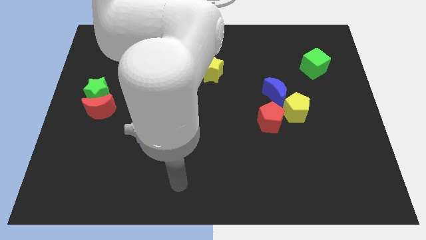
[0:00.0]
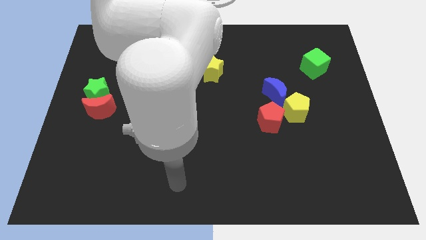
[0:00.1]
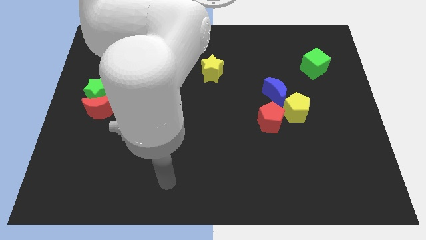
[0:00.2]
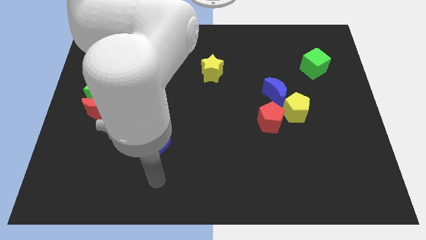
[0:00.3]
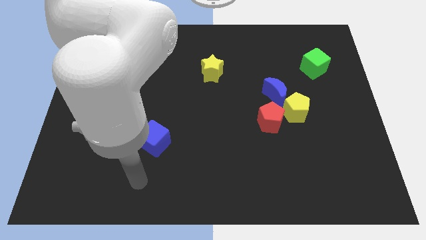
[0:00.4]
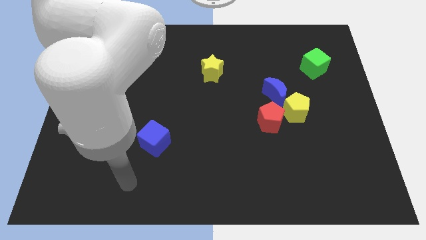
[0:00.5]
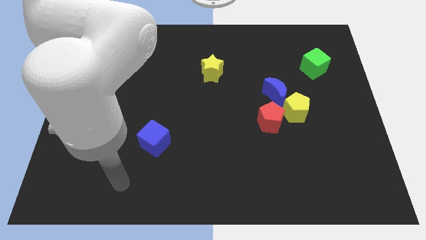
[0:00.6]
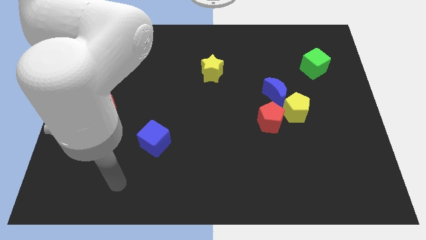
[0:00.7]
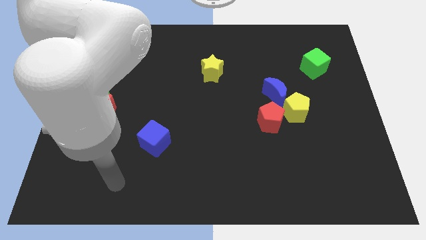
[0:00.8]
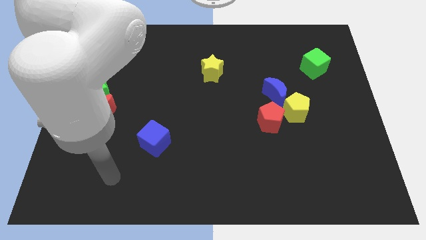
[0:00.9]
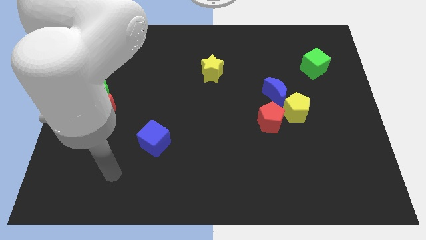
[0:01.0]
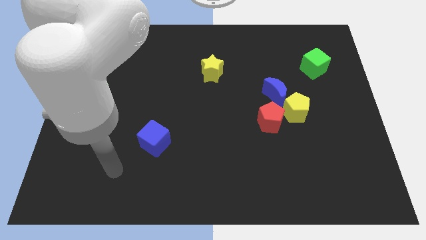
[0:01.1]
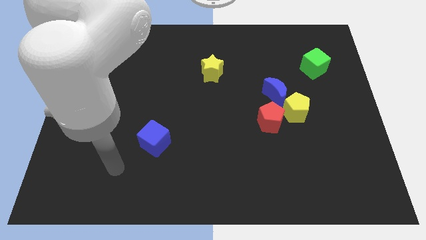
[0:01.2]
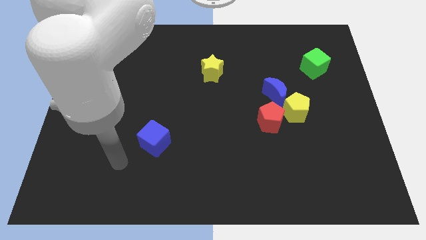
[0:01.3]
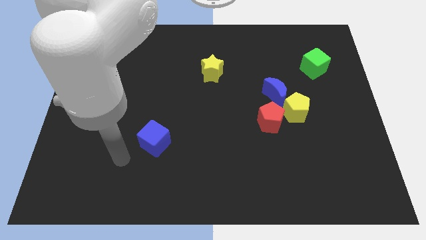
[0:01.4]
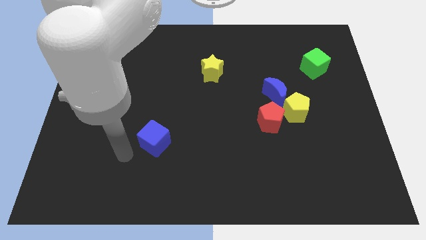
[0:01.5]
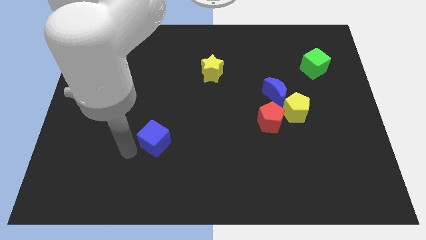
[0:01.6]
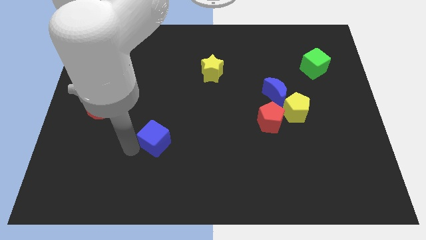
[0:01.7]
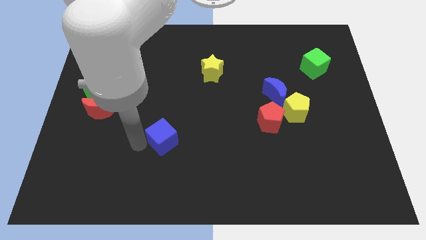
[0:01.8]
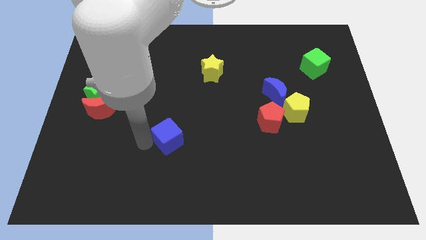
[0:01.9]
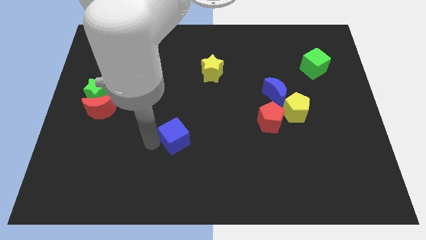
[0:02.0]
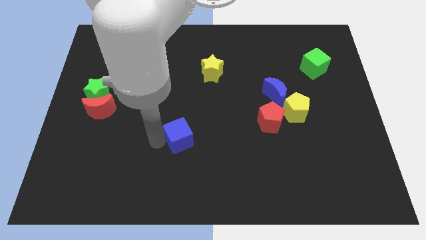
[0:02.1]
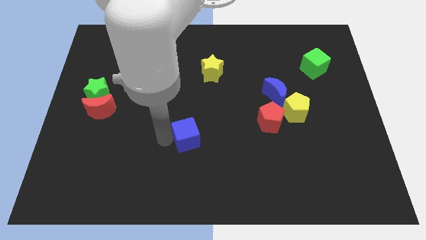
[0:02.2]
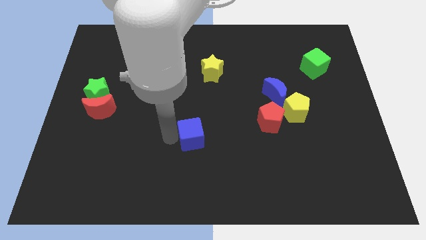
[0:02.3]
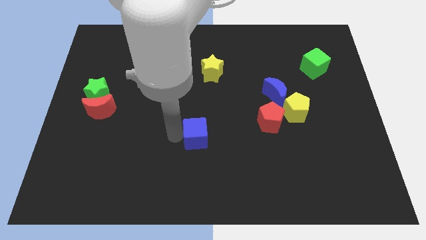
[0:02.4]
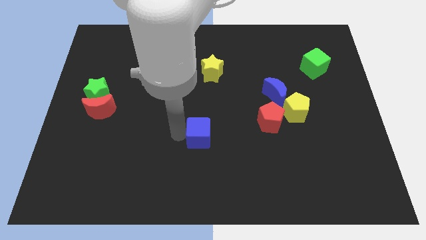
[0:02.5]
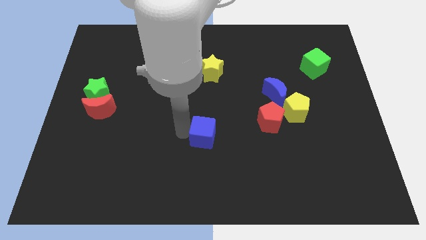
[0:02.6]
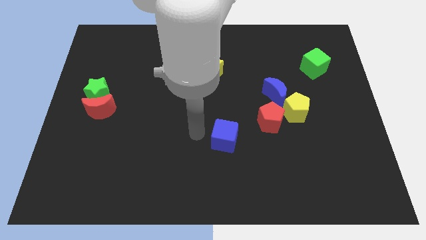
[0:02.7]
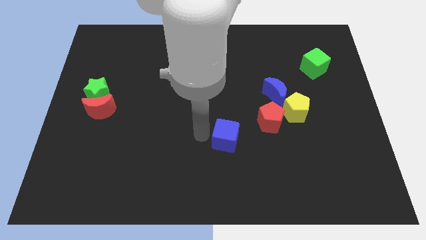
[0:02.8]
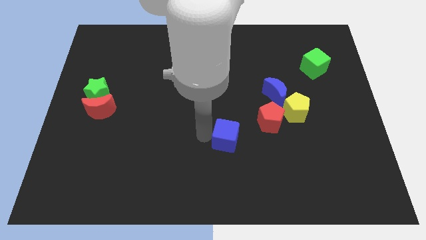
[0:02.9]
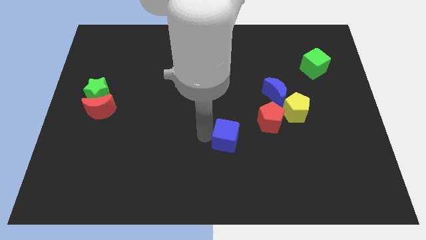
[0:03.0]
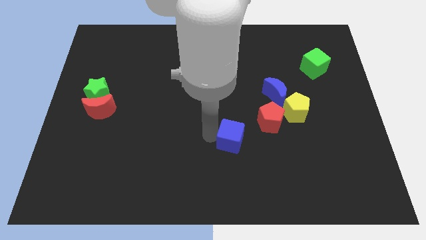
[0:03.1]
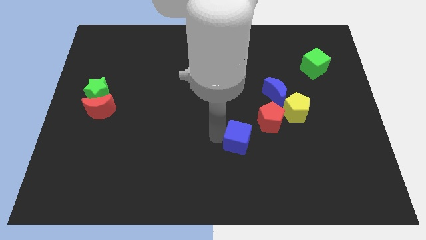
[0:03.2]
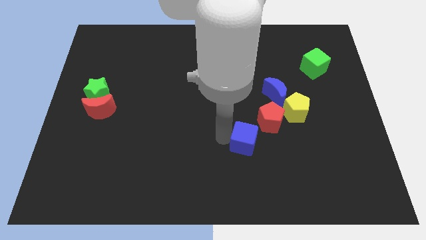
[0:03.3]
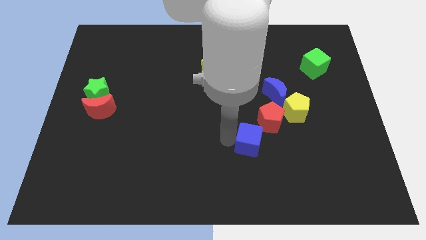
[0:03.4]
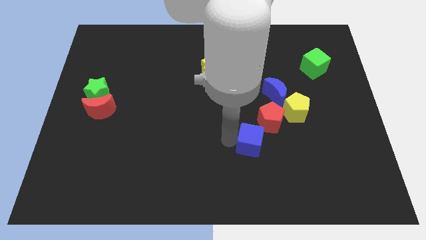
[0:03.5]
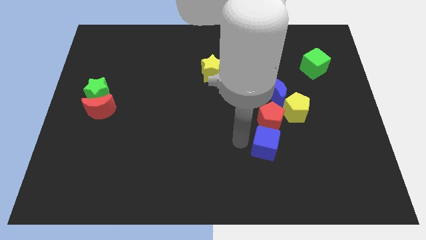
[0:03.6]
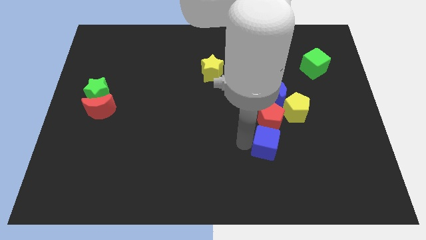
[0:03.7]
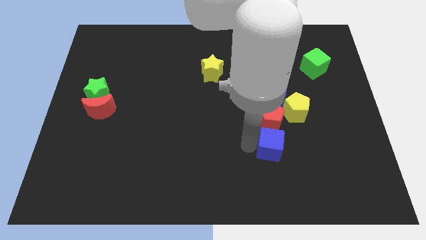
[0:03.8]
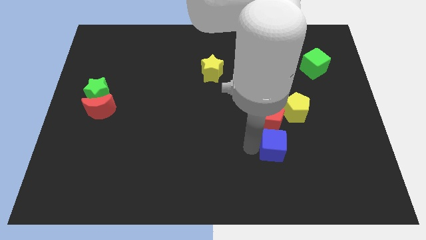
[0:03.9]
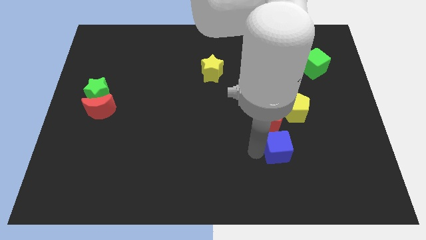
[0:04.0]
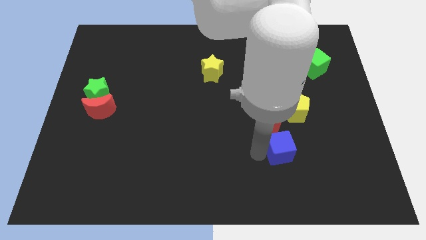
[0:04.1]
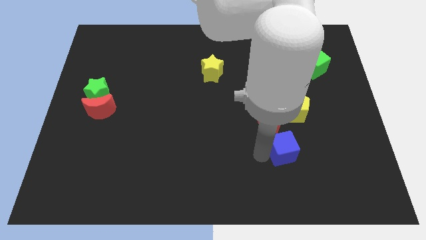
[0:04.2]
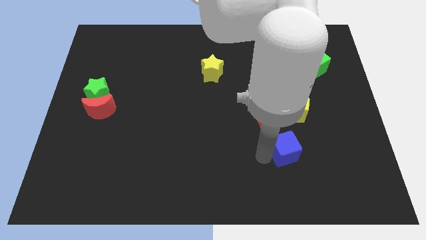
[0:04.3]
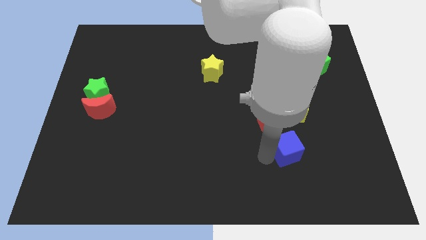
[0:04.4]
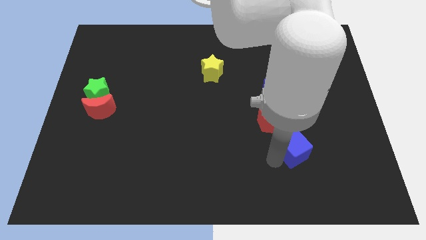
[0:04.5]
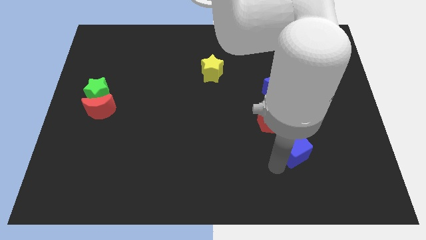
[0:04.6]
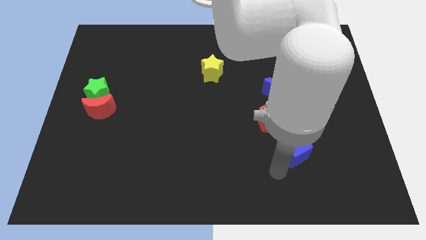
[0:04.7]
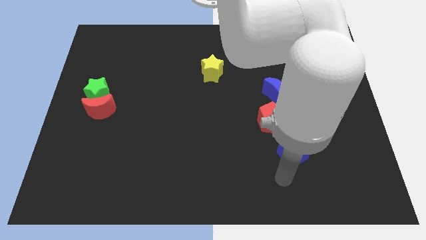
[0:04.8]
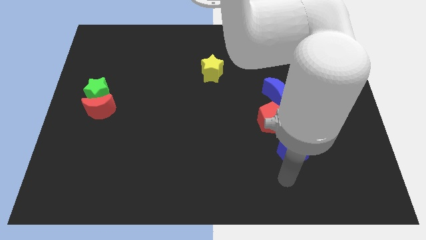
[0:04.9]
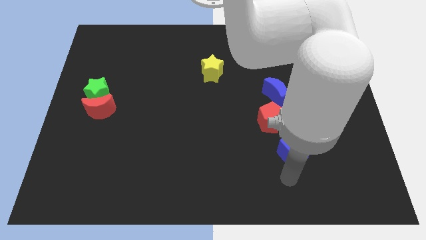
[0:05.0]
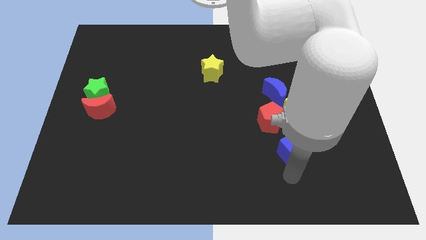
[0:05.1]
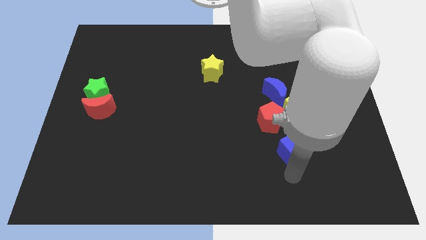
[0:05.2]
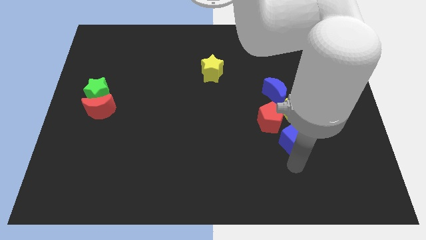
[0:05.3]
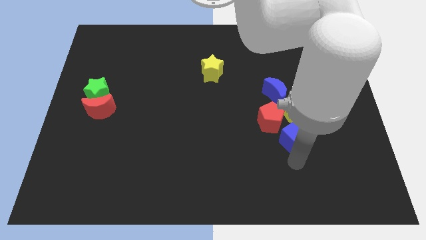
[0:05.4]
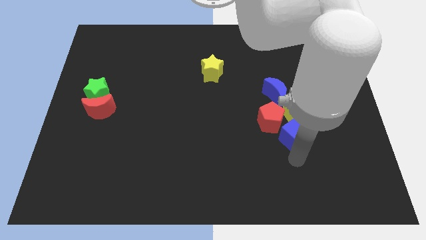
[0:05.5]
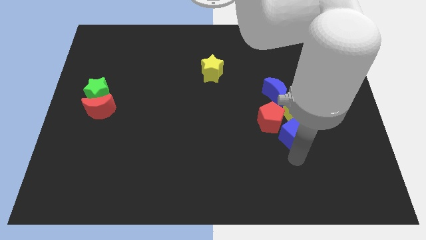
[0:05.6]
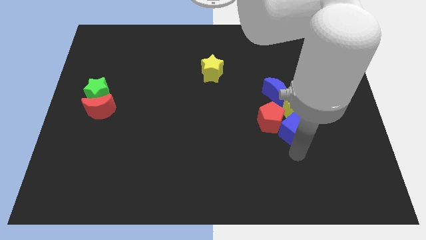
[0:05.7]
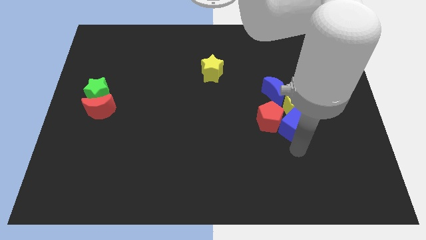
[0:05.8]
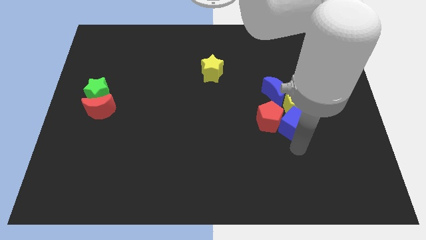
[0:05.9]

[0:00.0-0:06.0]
put the blue cube to the yellow pentagon

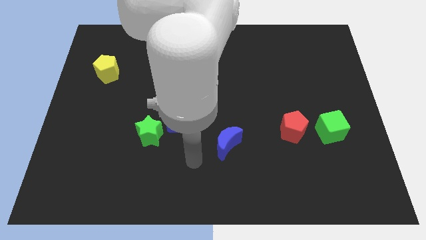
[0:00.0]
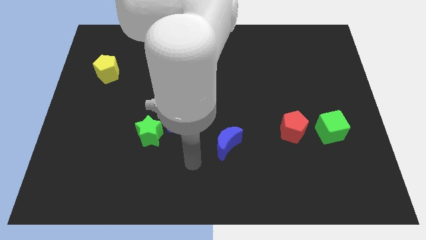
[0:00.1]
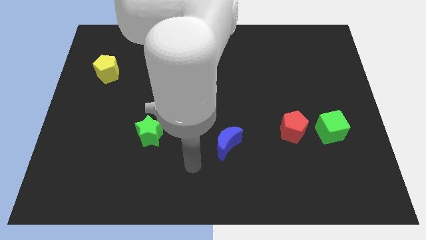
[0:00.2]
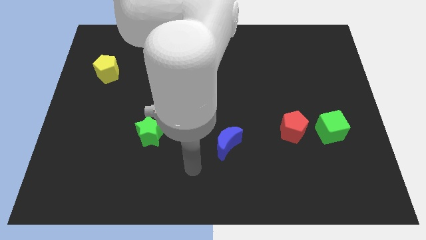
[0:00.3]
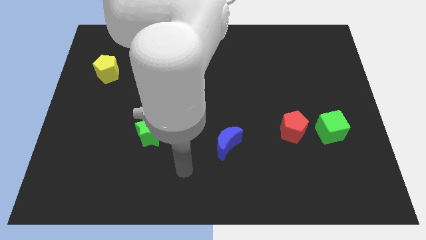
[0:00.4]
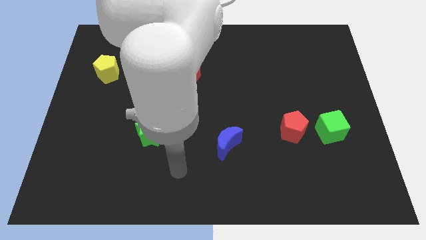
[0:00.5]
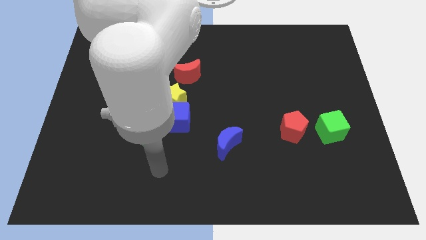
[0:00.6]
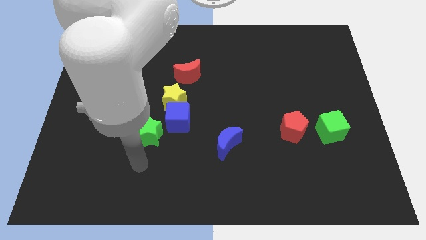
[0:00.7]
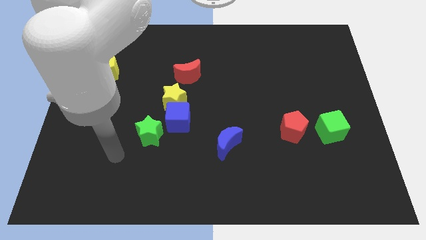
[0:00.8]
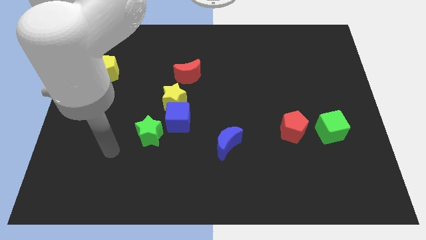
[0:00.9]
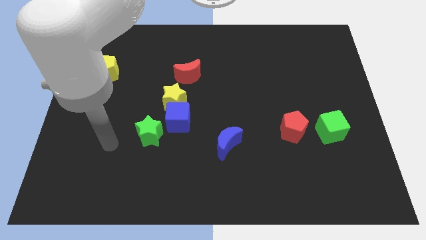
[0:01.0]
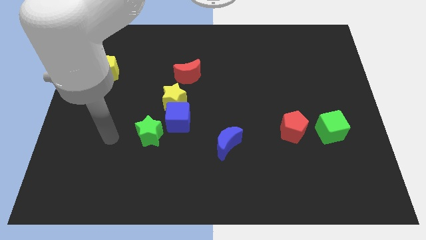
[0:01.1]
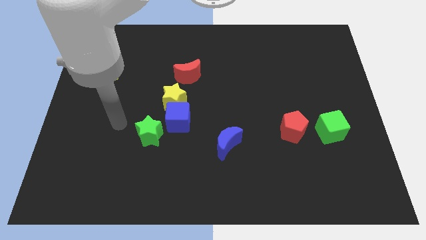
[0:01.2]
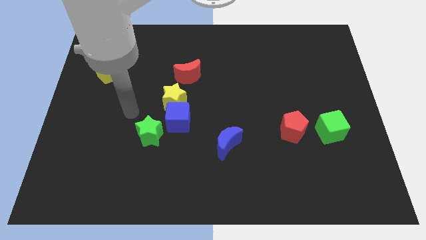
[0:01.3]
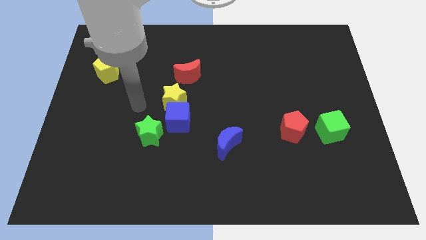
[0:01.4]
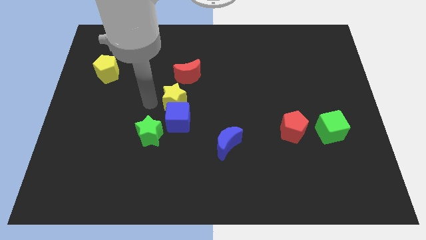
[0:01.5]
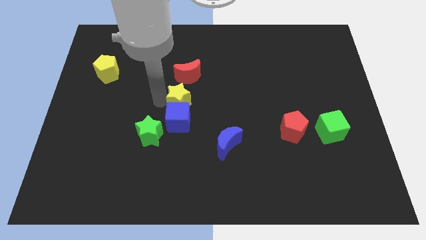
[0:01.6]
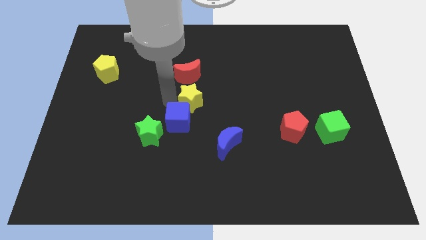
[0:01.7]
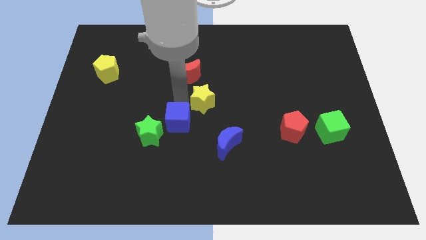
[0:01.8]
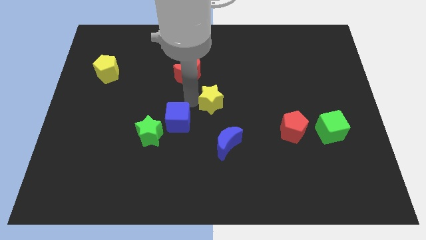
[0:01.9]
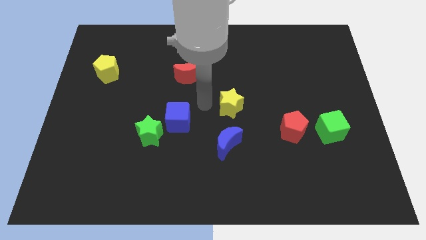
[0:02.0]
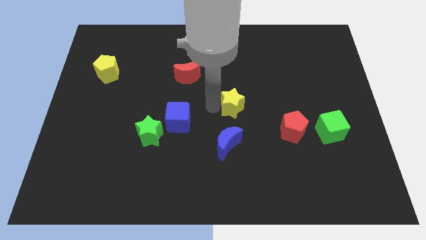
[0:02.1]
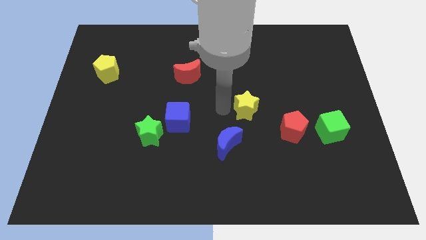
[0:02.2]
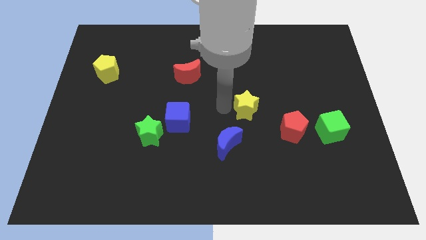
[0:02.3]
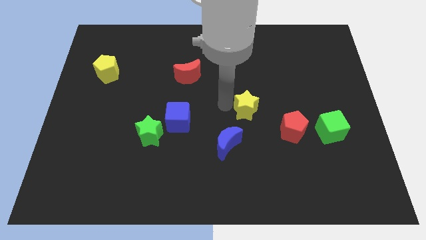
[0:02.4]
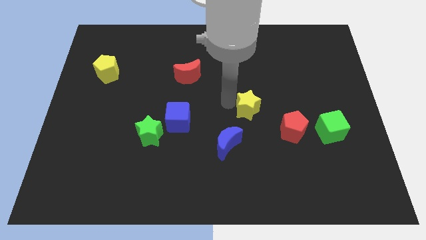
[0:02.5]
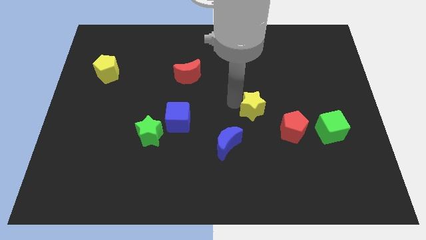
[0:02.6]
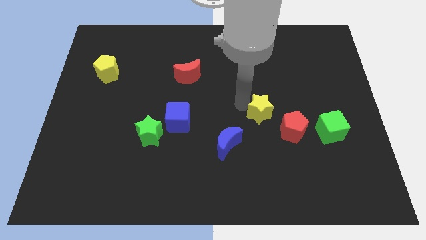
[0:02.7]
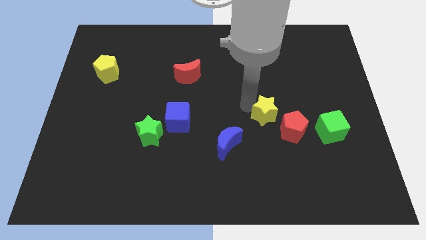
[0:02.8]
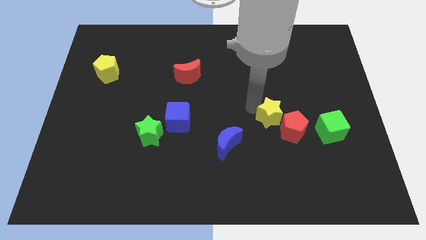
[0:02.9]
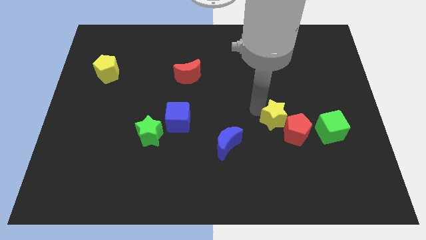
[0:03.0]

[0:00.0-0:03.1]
move the yellow star close to the red pentagon
